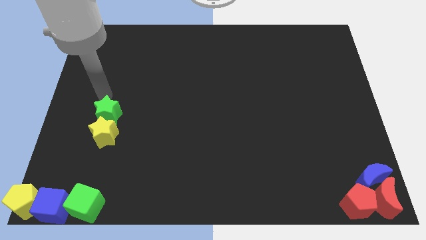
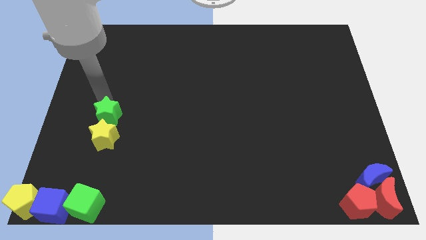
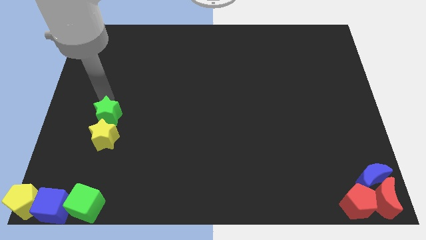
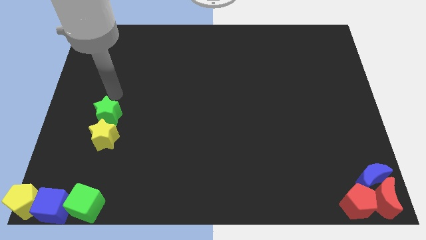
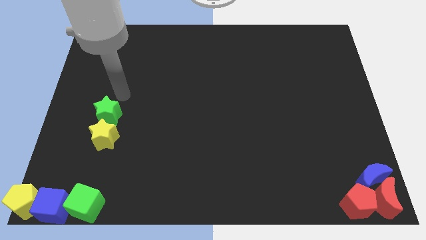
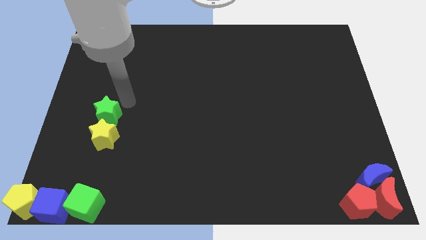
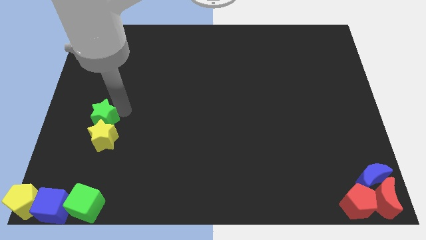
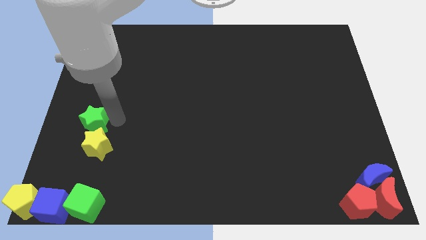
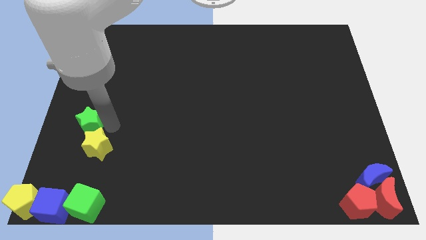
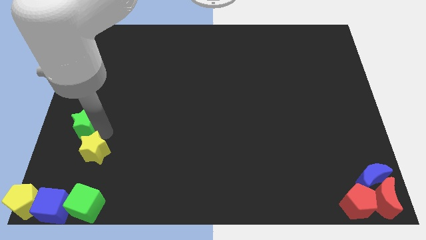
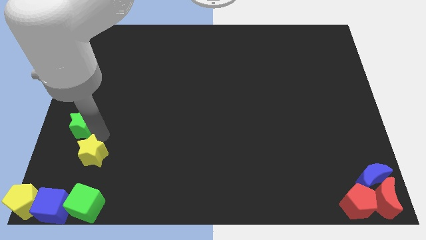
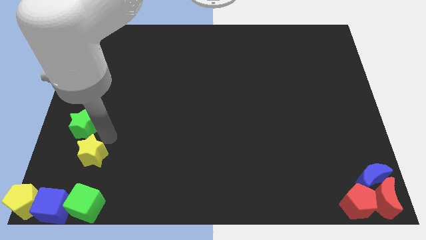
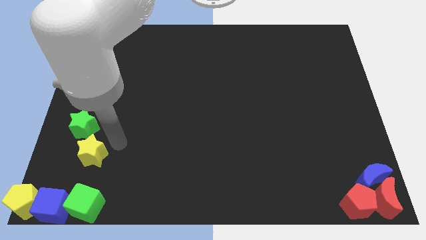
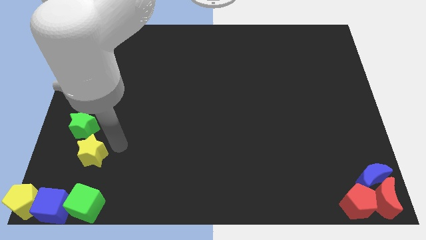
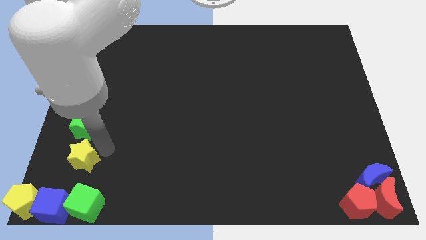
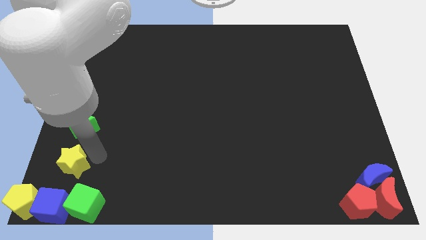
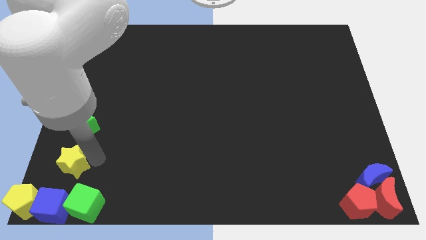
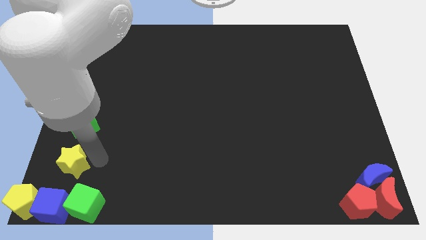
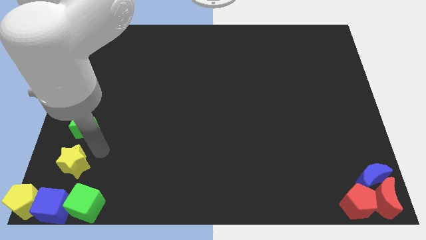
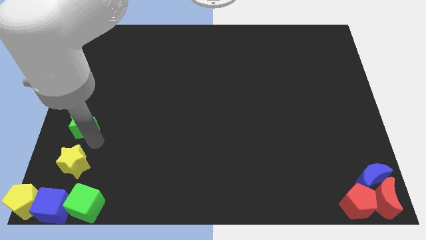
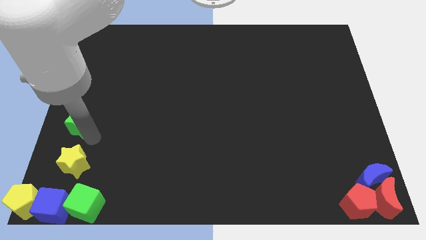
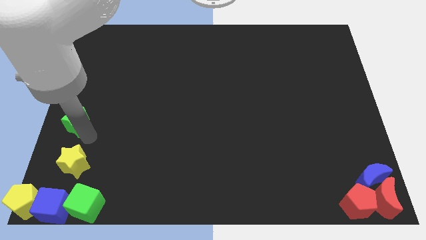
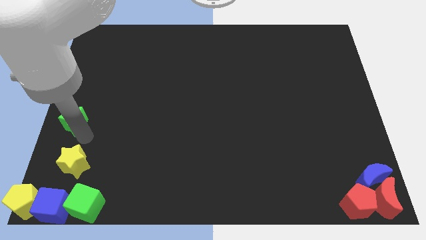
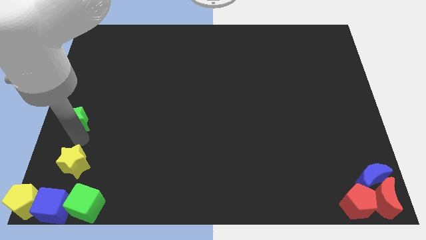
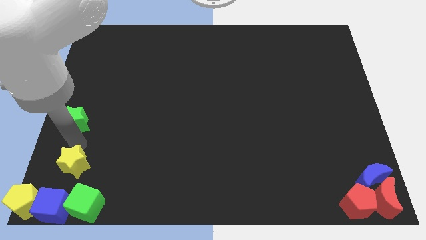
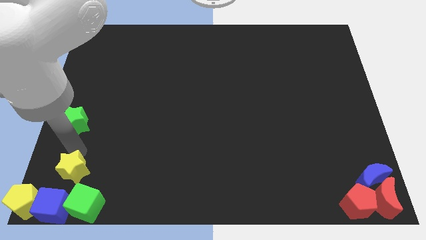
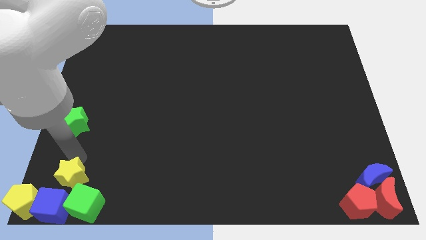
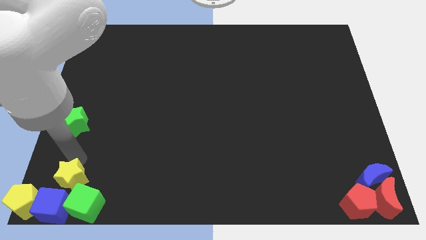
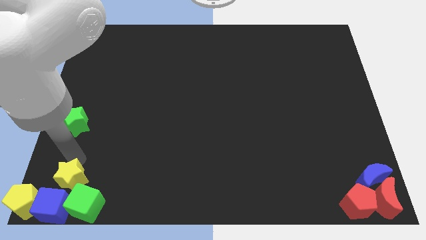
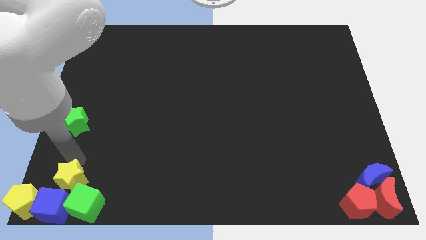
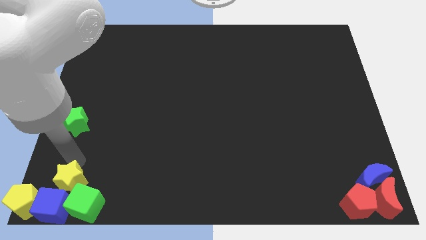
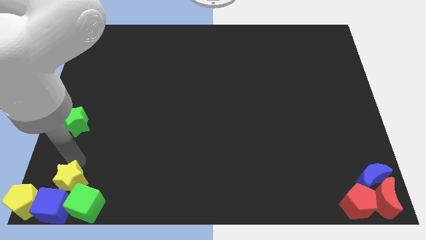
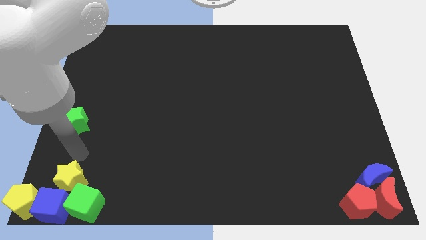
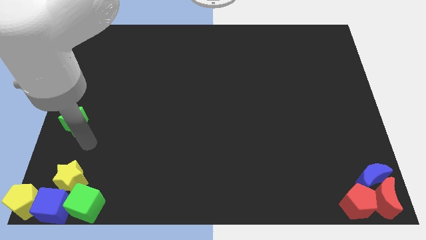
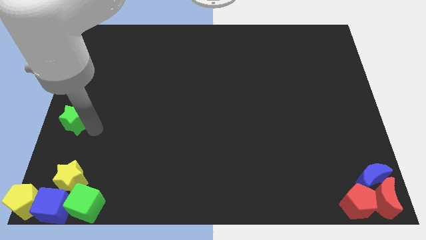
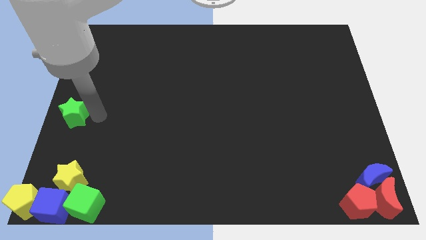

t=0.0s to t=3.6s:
push yellow star into green cube and blue cube

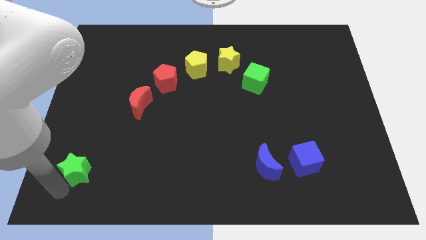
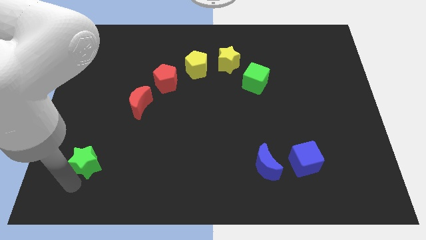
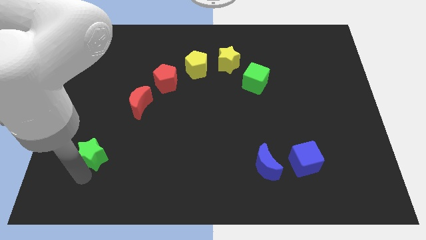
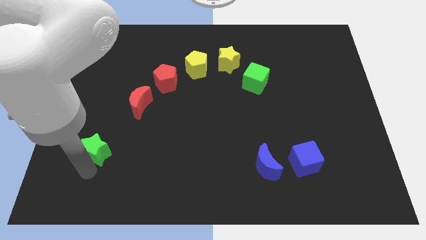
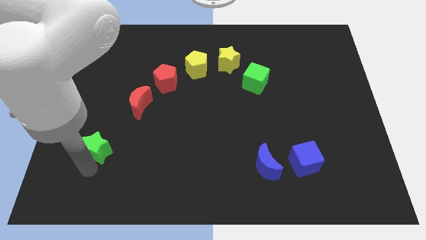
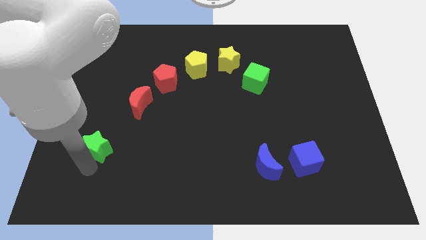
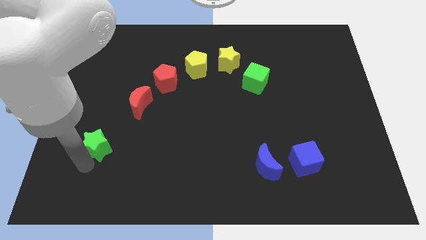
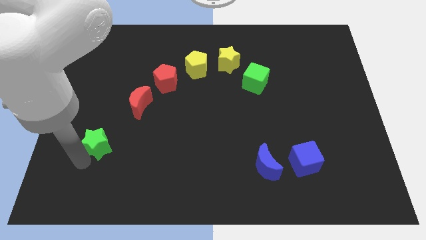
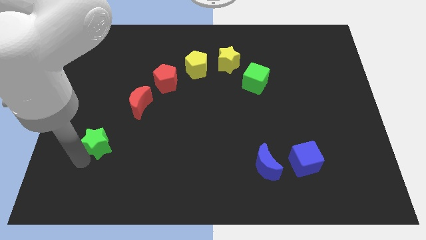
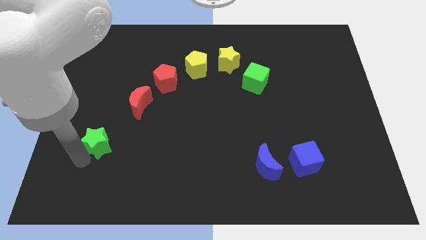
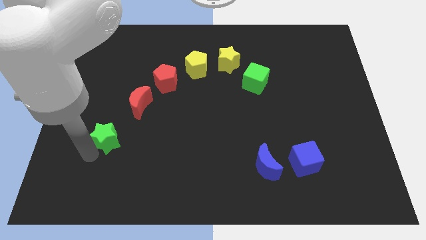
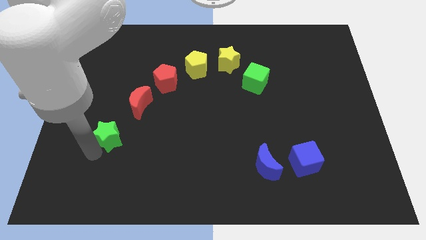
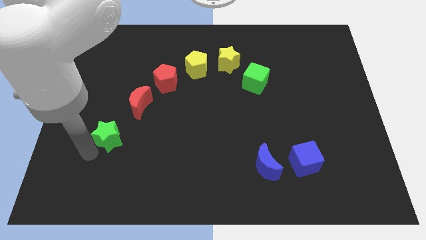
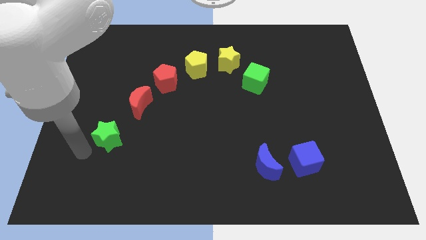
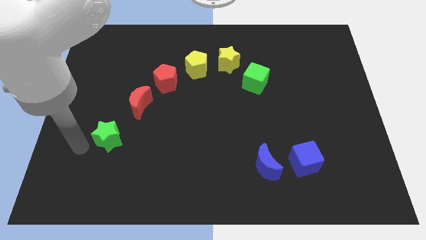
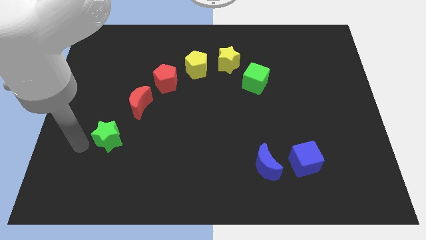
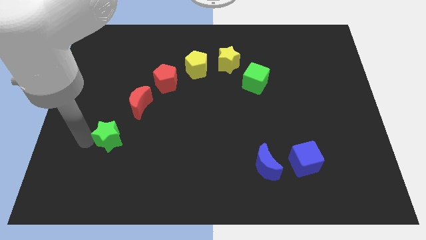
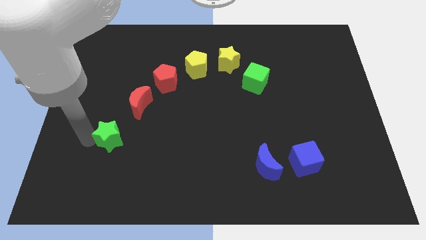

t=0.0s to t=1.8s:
move the green star to the bottom left of the red crescent

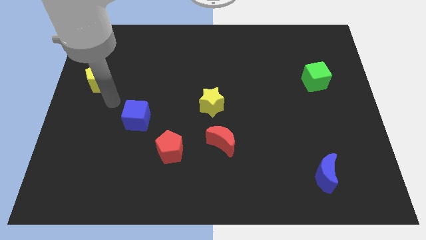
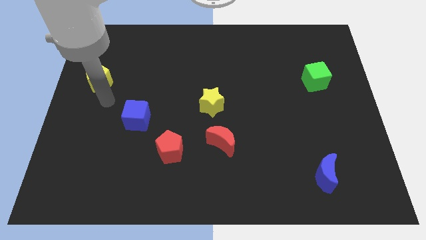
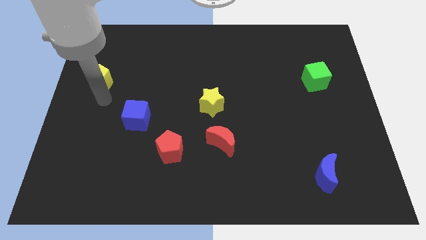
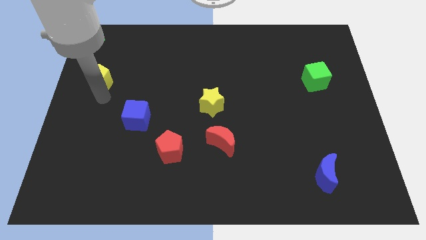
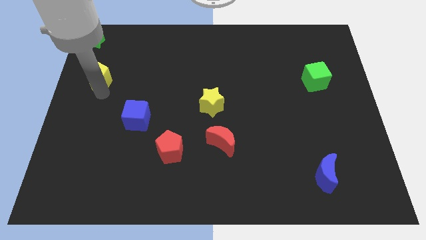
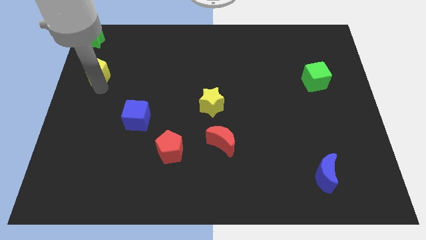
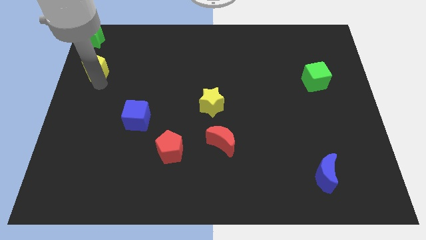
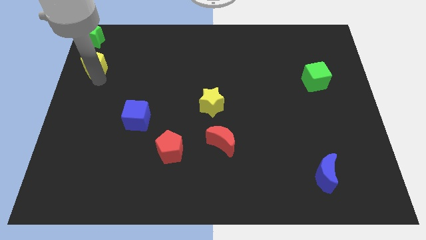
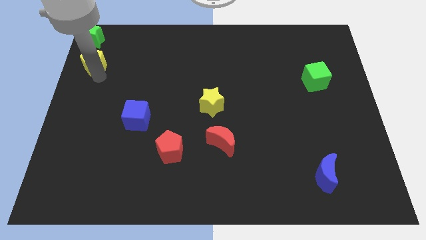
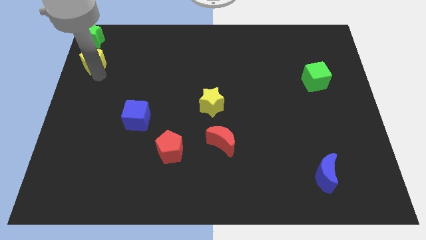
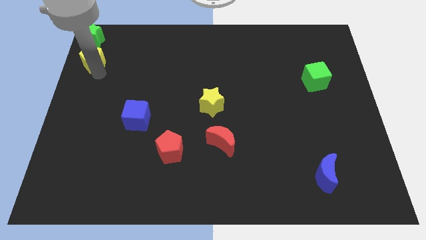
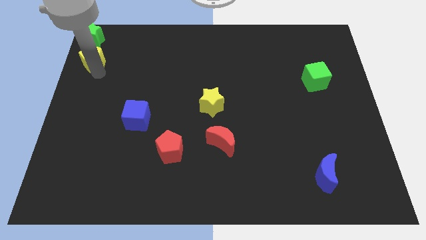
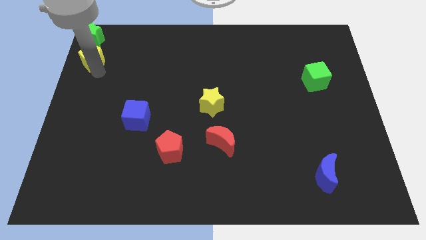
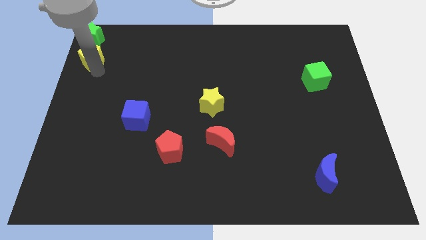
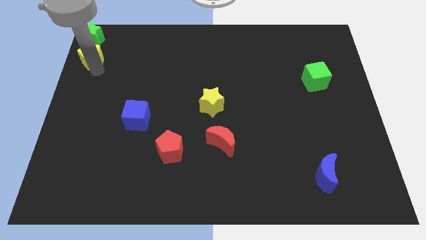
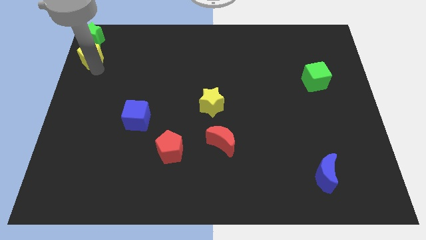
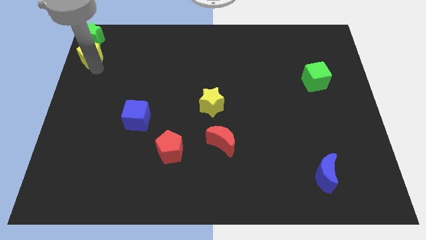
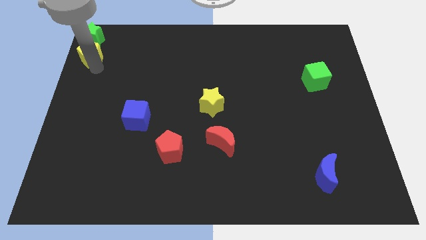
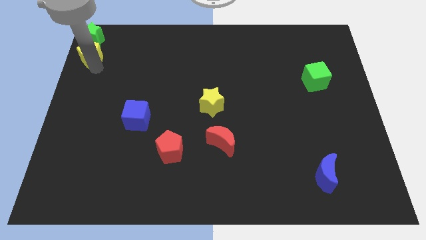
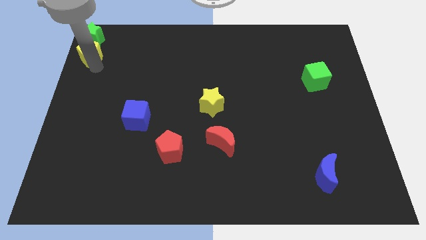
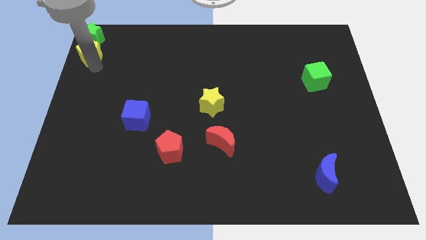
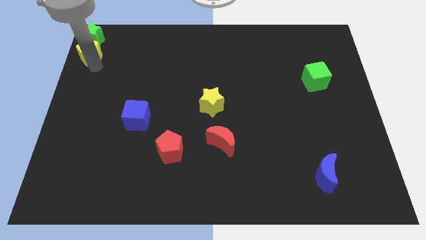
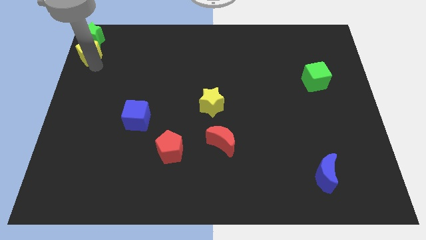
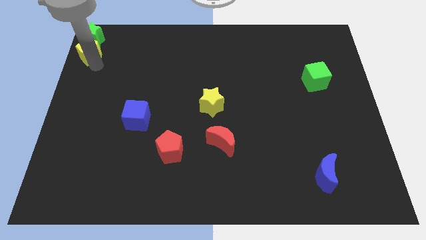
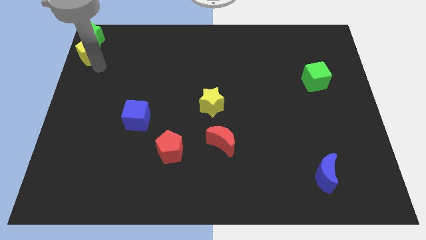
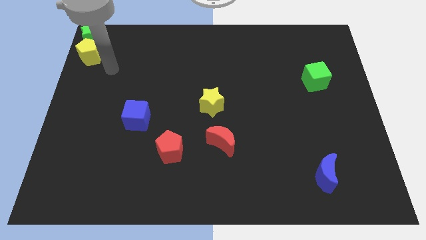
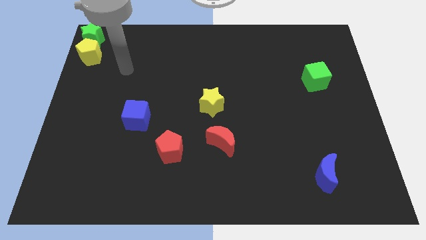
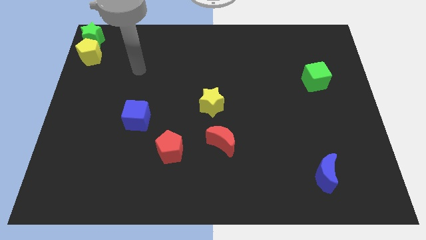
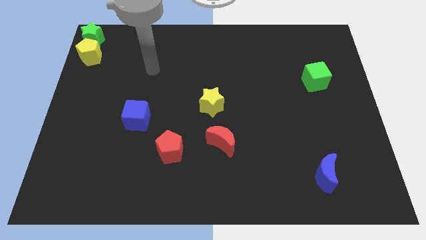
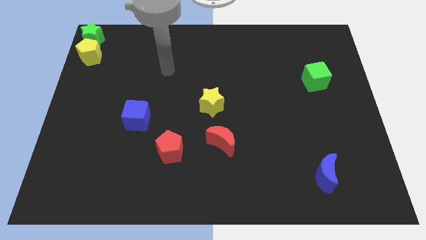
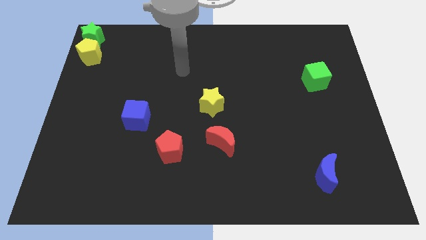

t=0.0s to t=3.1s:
slide yellow pentagon into green star

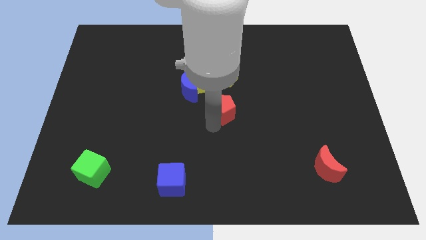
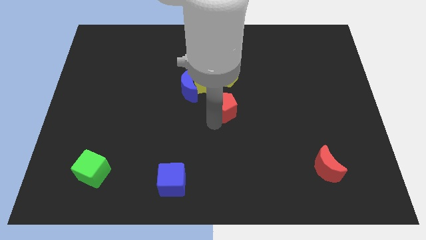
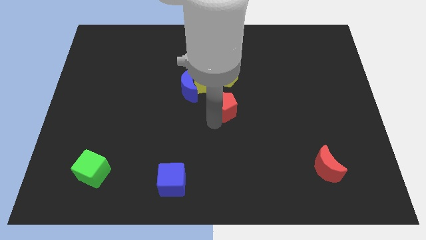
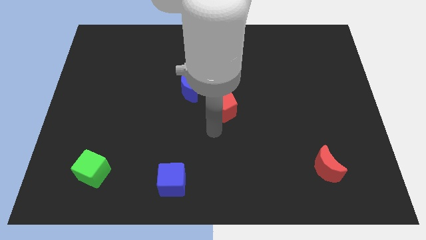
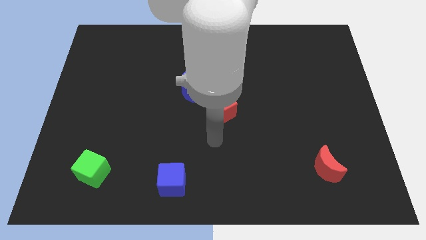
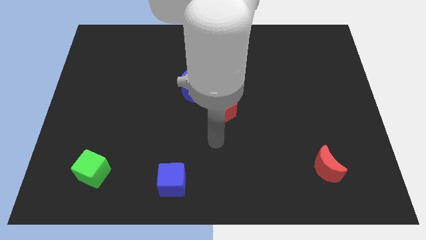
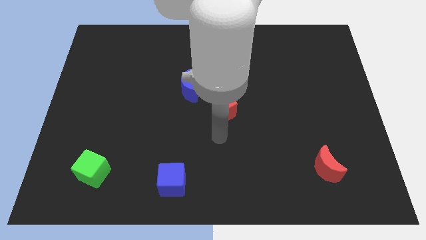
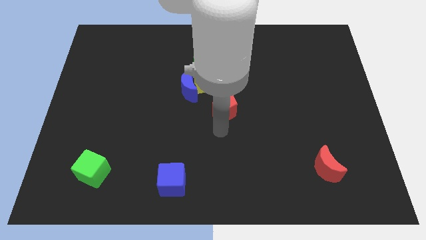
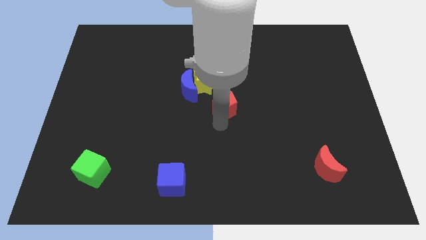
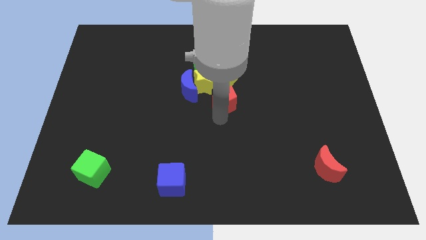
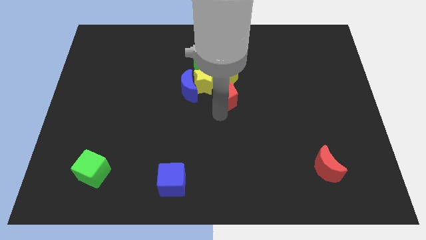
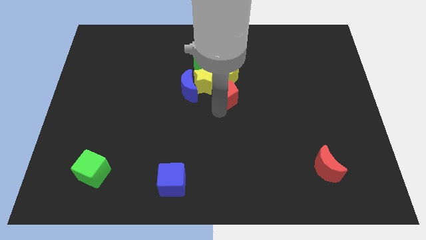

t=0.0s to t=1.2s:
push the red pentagon towards the yellow pentagon
